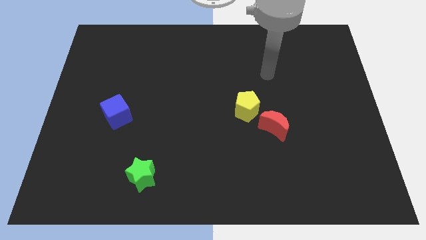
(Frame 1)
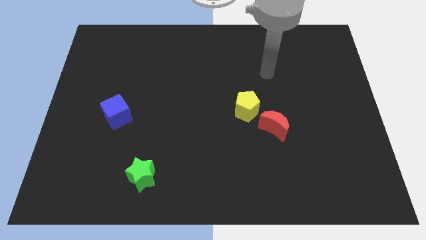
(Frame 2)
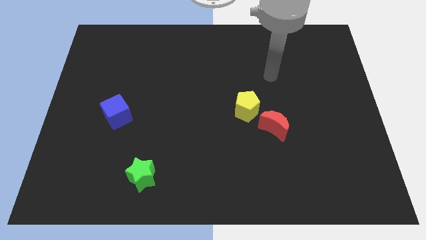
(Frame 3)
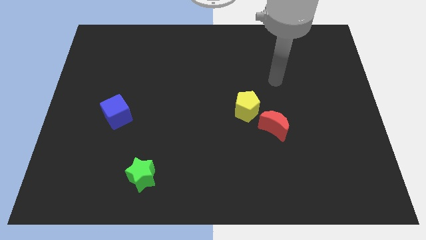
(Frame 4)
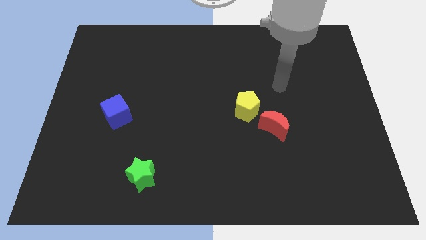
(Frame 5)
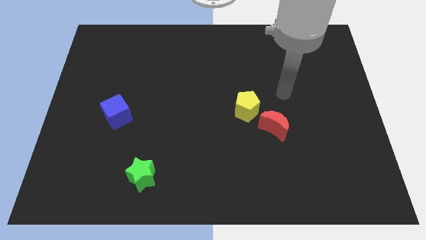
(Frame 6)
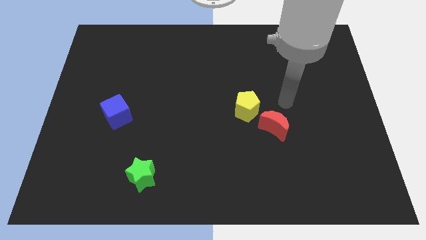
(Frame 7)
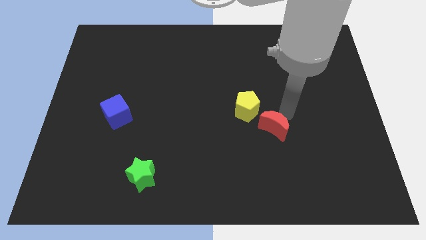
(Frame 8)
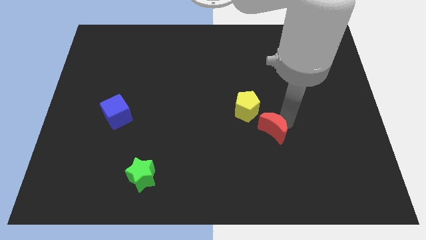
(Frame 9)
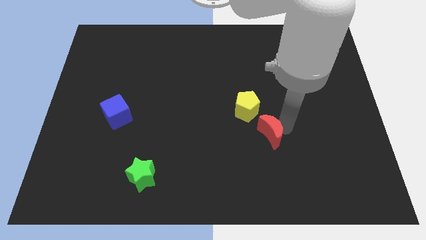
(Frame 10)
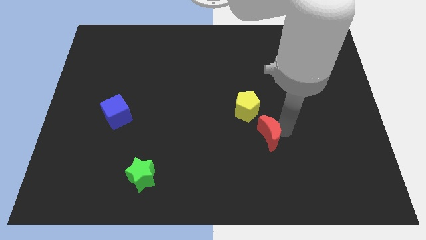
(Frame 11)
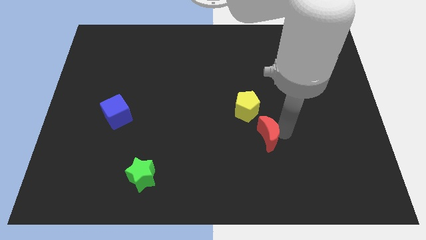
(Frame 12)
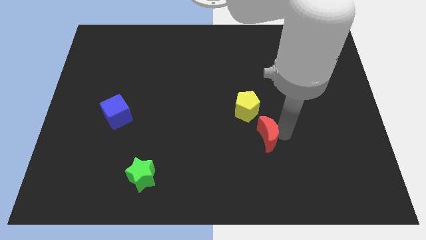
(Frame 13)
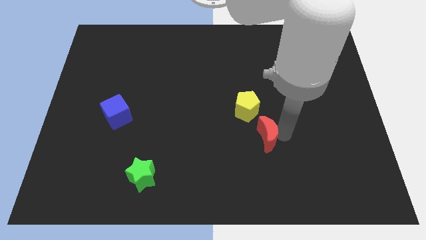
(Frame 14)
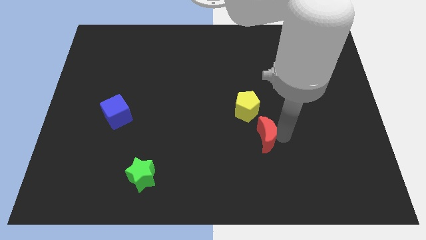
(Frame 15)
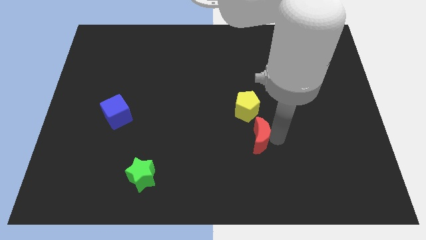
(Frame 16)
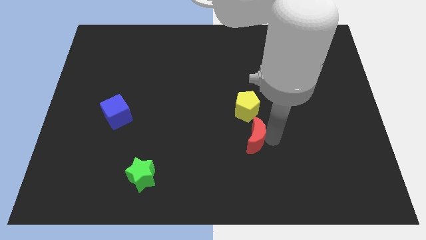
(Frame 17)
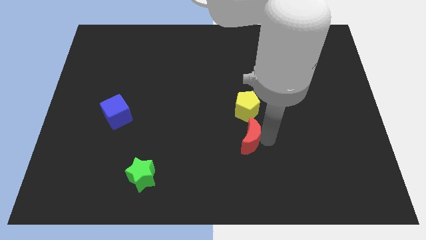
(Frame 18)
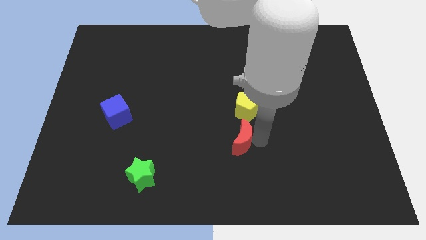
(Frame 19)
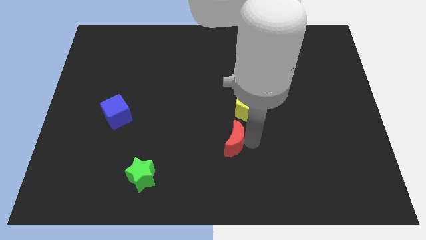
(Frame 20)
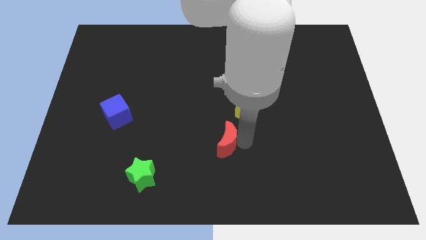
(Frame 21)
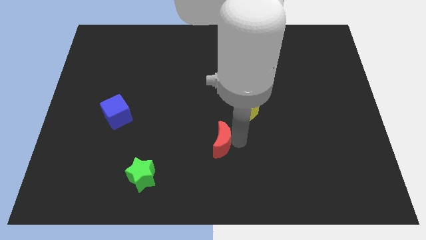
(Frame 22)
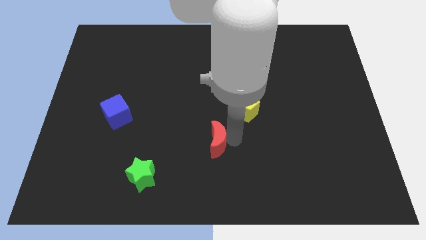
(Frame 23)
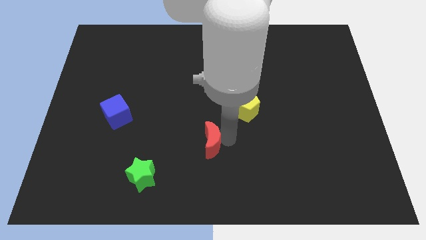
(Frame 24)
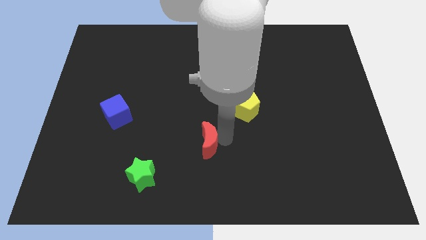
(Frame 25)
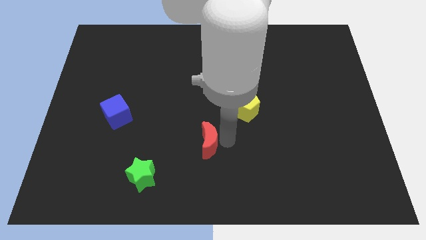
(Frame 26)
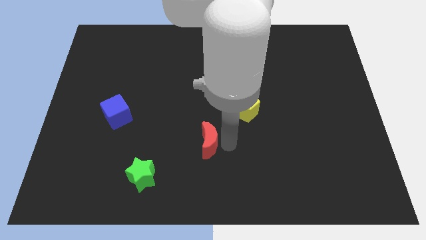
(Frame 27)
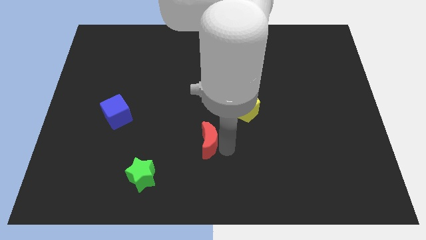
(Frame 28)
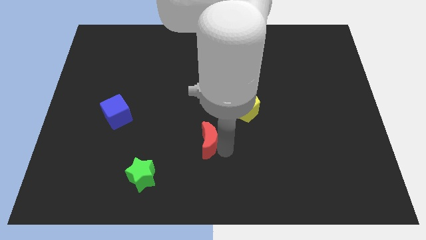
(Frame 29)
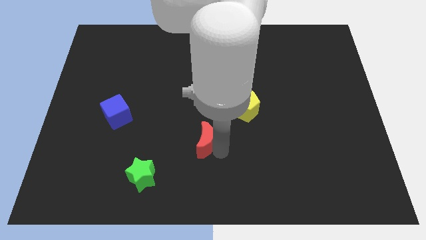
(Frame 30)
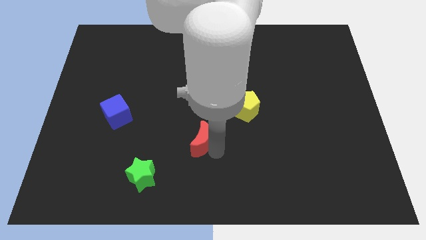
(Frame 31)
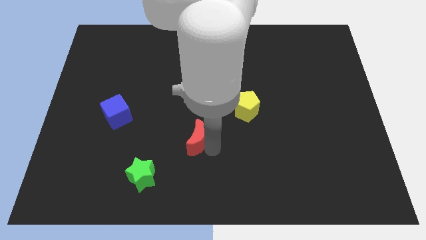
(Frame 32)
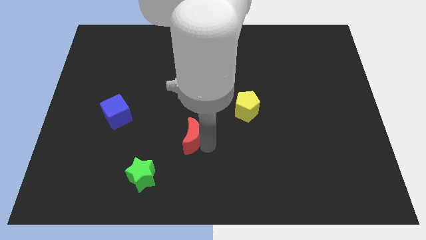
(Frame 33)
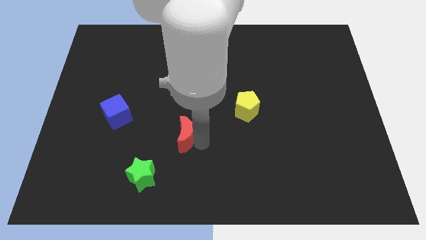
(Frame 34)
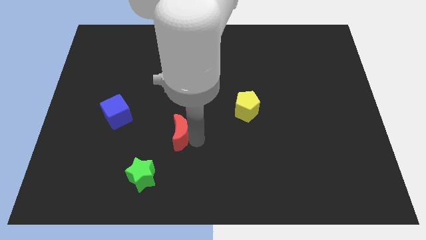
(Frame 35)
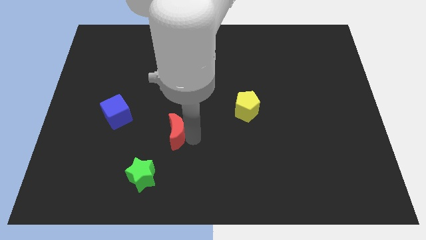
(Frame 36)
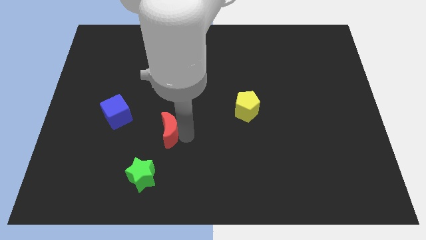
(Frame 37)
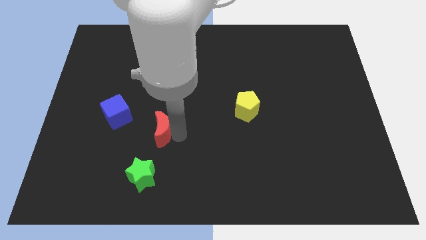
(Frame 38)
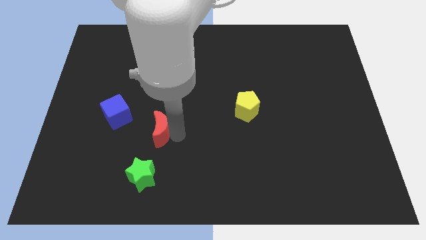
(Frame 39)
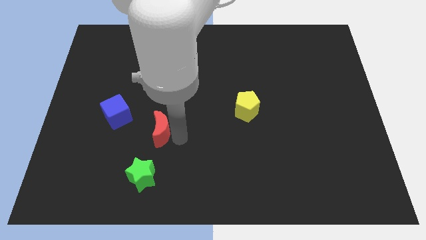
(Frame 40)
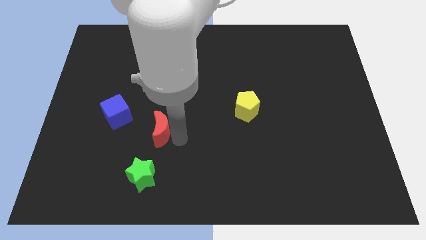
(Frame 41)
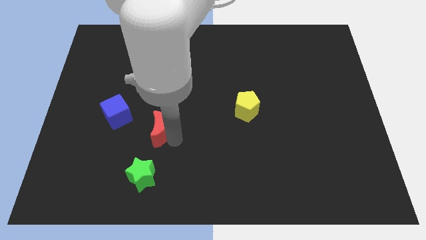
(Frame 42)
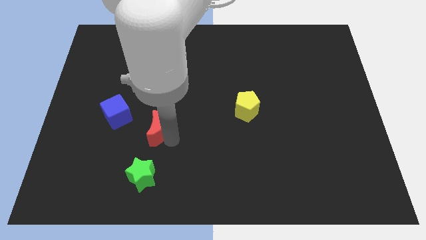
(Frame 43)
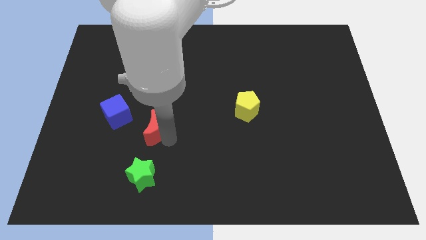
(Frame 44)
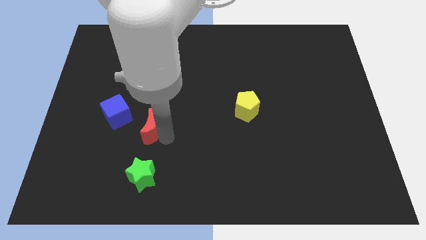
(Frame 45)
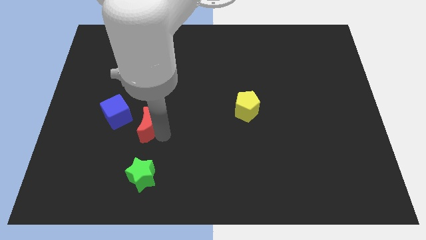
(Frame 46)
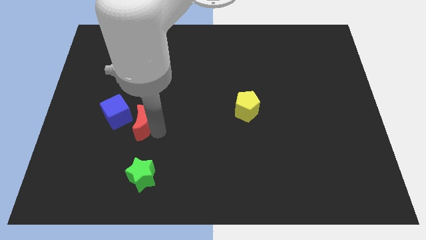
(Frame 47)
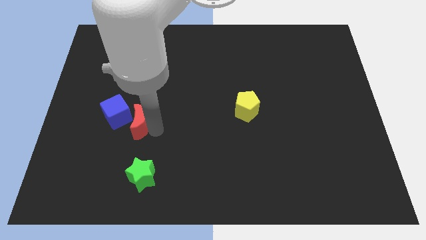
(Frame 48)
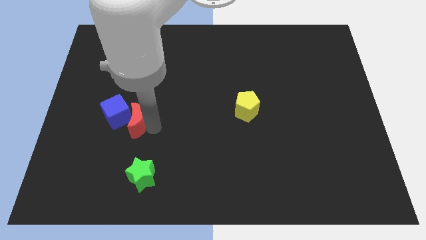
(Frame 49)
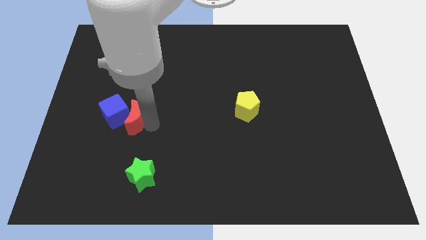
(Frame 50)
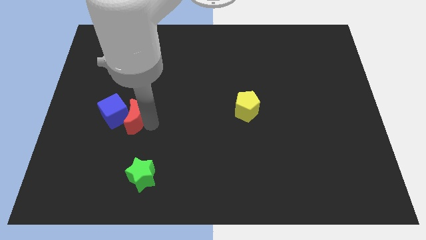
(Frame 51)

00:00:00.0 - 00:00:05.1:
move the moon to the blue block

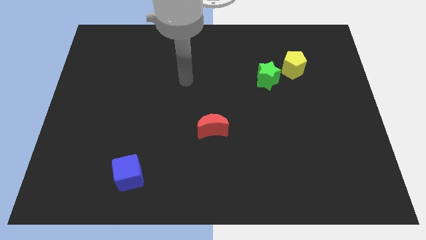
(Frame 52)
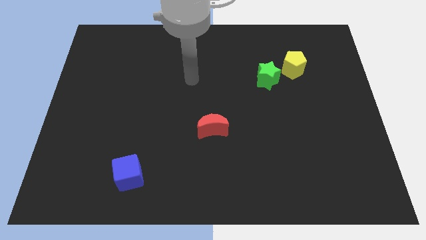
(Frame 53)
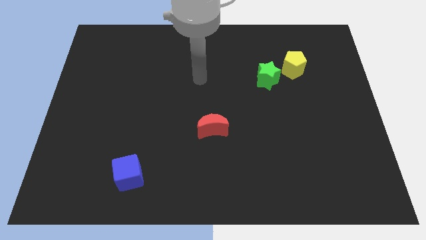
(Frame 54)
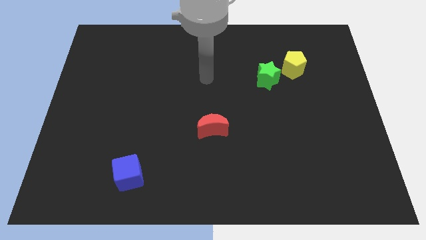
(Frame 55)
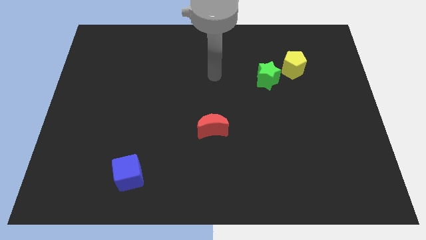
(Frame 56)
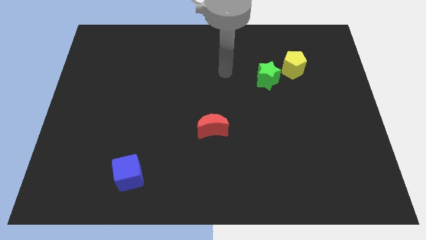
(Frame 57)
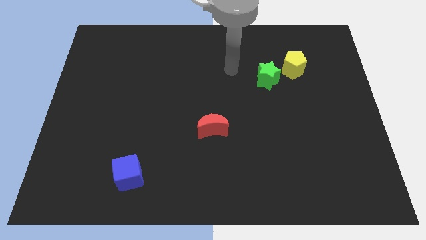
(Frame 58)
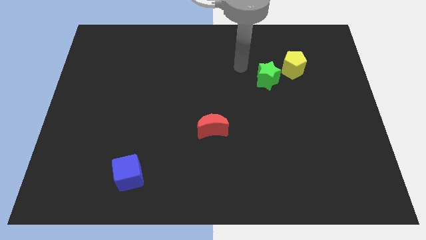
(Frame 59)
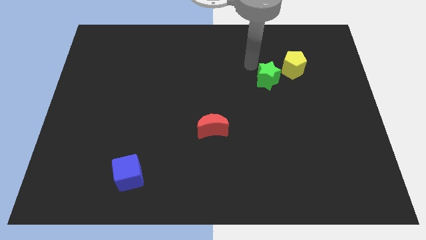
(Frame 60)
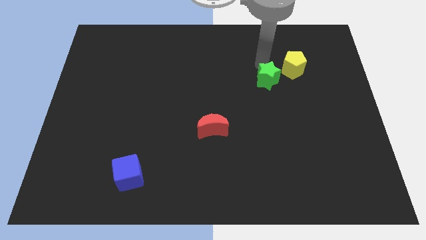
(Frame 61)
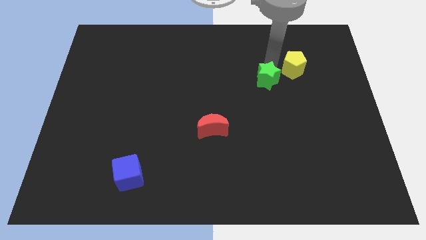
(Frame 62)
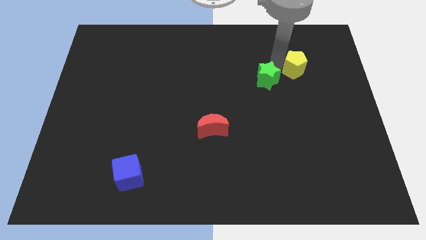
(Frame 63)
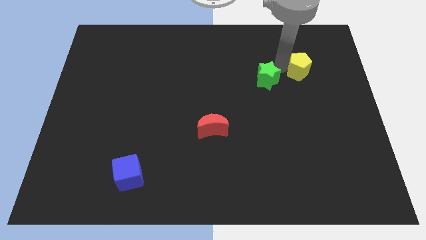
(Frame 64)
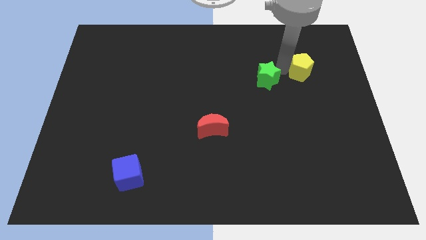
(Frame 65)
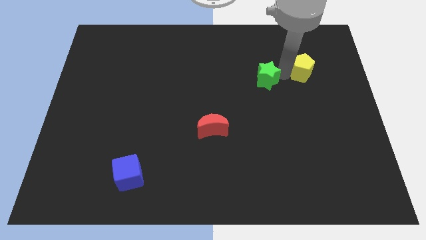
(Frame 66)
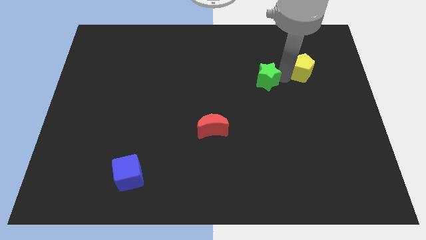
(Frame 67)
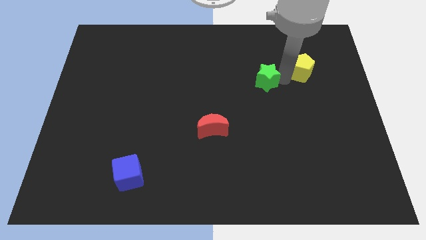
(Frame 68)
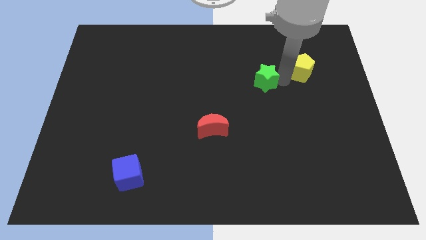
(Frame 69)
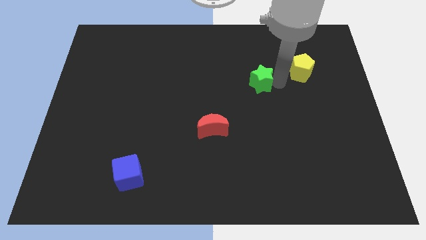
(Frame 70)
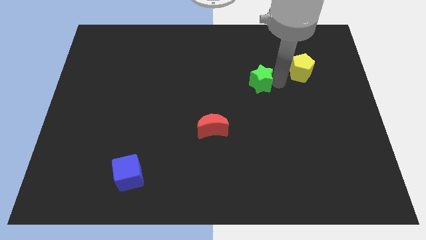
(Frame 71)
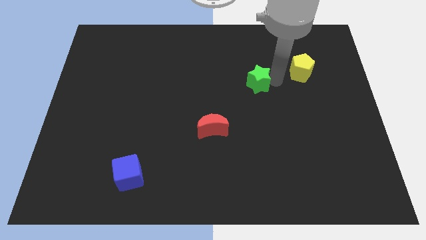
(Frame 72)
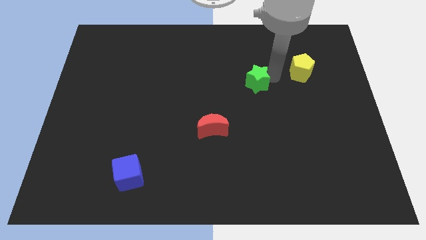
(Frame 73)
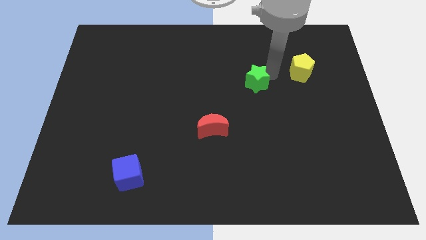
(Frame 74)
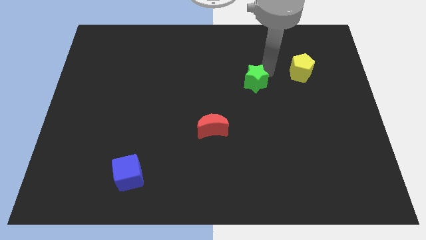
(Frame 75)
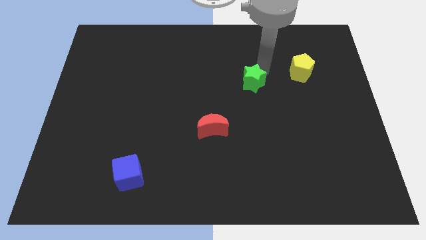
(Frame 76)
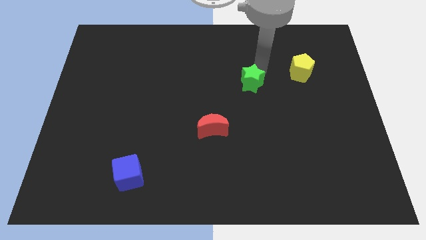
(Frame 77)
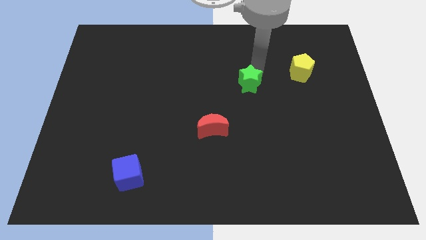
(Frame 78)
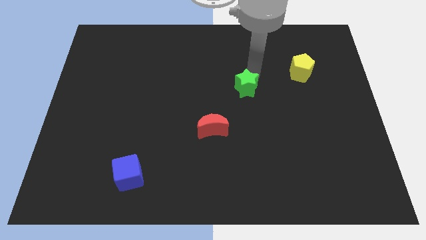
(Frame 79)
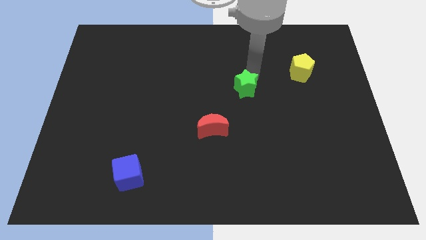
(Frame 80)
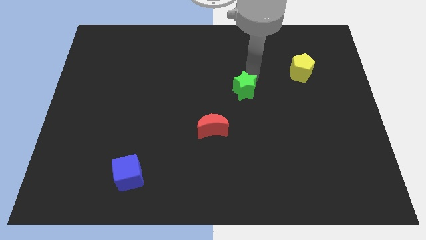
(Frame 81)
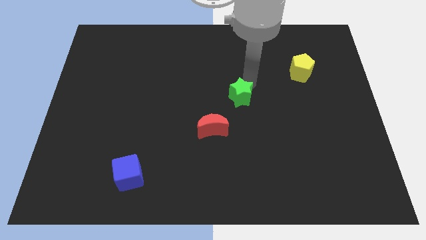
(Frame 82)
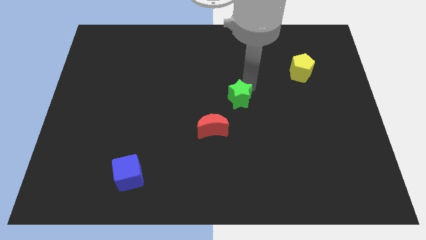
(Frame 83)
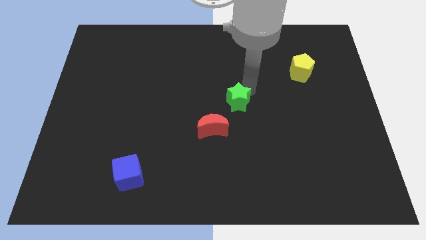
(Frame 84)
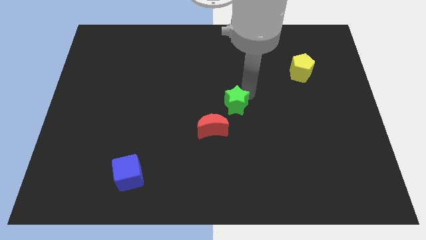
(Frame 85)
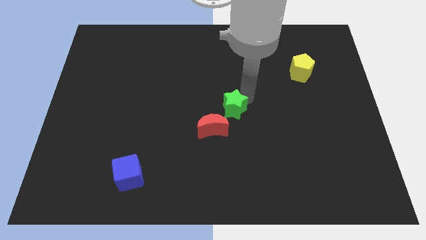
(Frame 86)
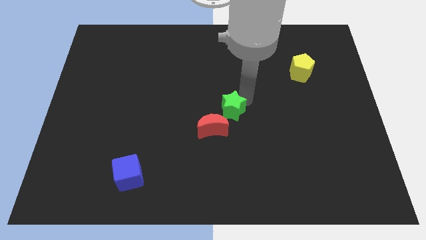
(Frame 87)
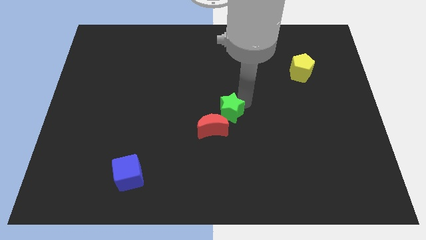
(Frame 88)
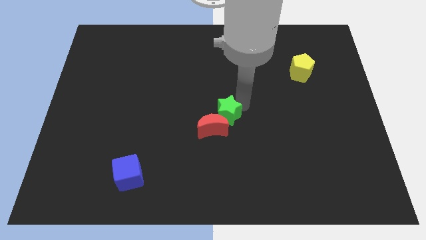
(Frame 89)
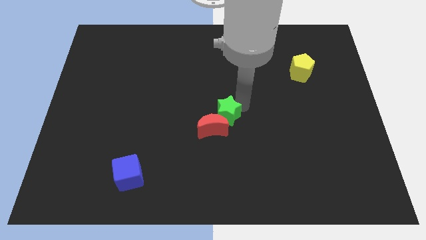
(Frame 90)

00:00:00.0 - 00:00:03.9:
put the star to the red moon
